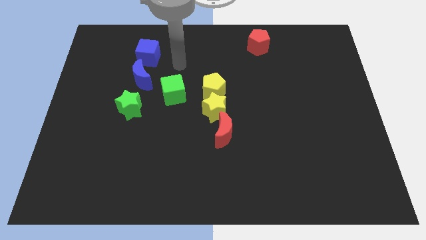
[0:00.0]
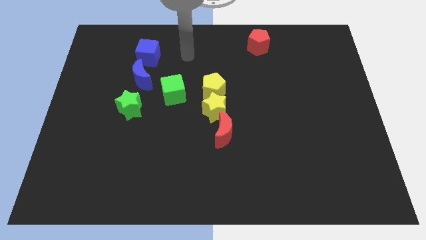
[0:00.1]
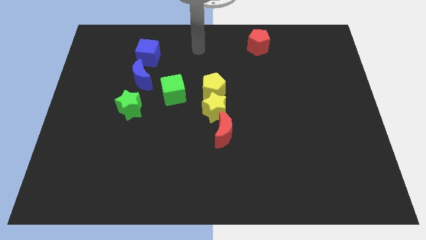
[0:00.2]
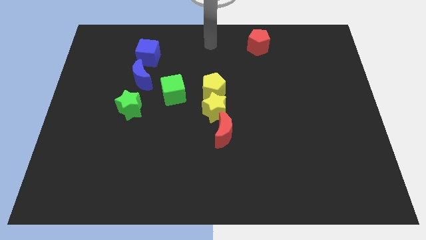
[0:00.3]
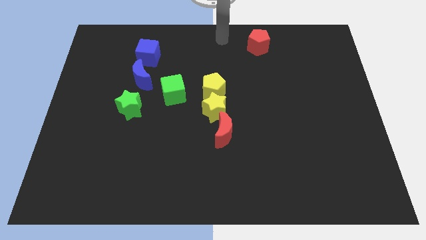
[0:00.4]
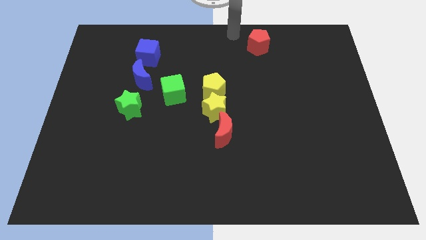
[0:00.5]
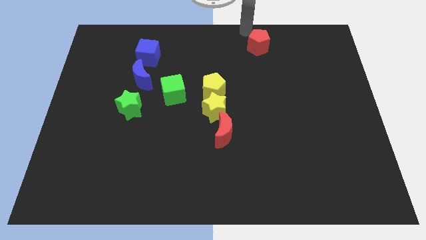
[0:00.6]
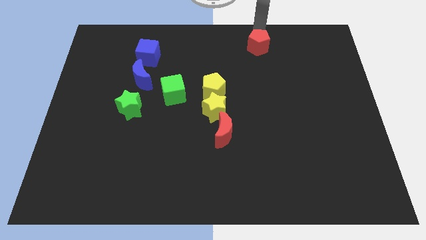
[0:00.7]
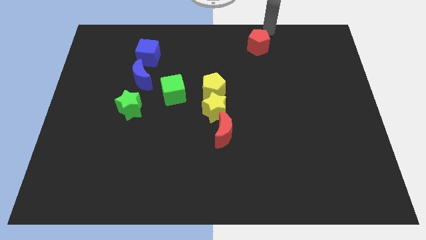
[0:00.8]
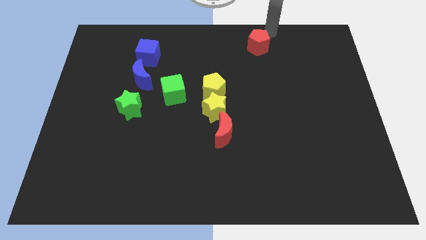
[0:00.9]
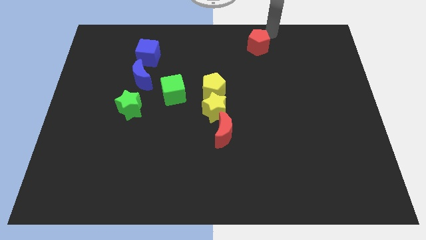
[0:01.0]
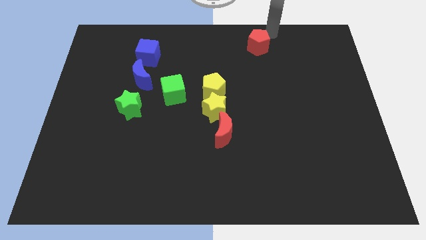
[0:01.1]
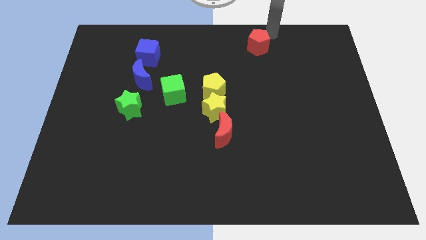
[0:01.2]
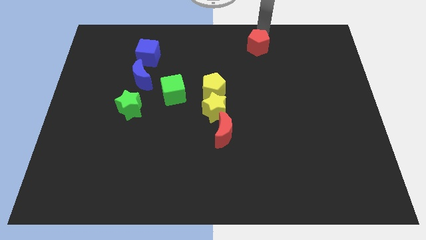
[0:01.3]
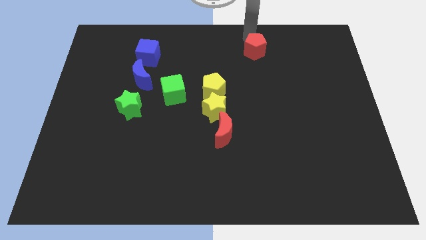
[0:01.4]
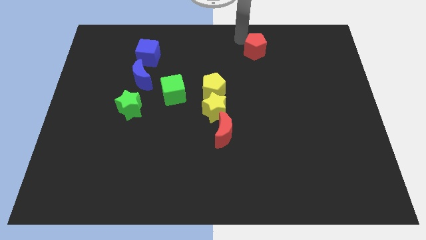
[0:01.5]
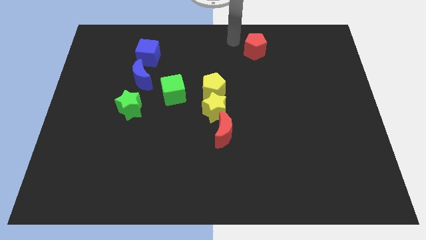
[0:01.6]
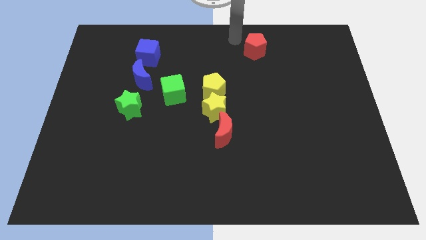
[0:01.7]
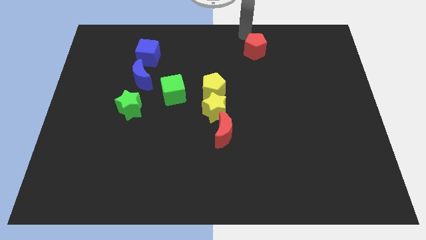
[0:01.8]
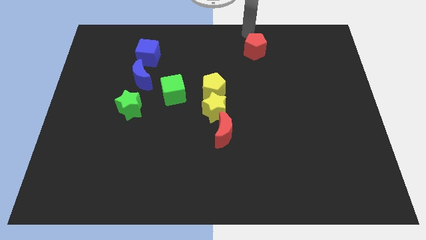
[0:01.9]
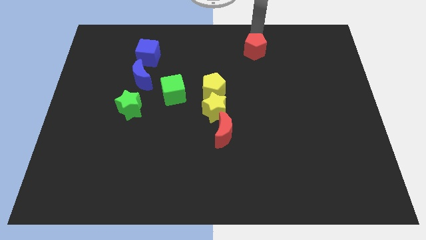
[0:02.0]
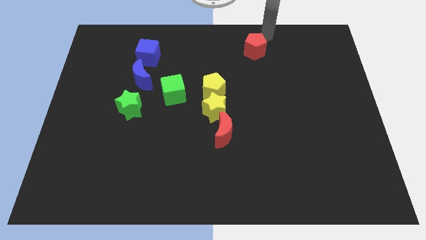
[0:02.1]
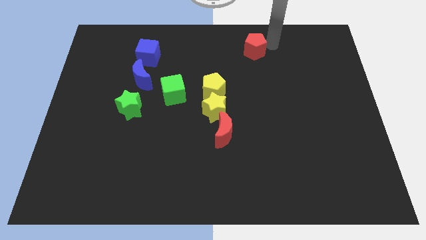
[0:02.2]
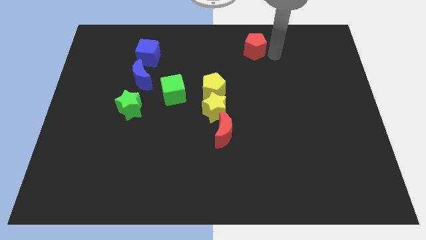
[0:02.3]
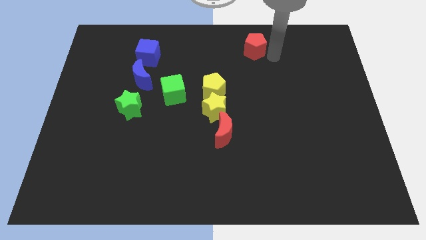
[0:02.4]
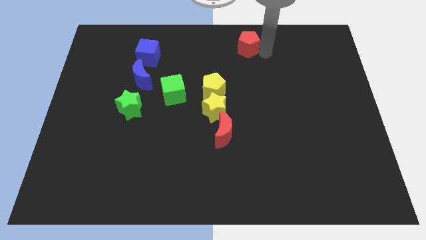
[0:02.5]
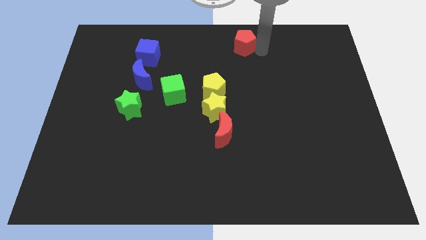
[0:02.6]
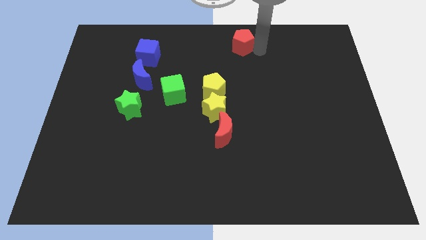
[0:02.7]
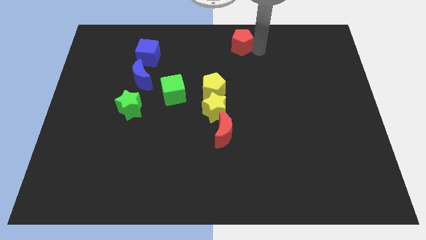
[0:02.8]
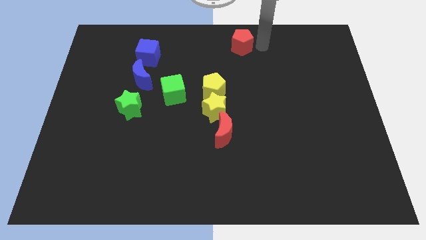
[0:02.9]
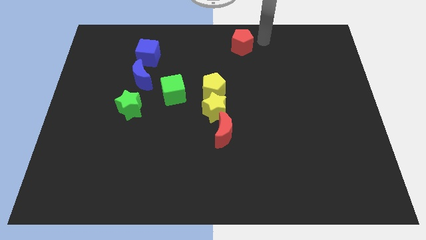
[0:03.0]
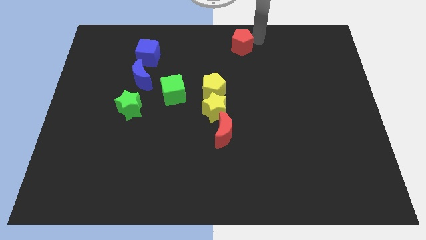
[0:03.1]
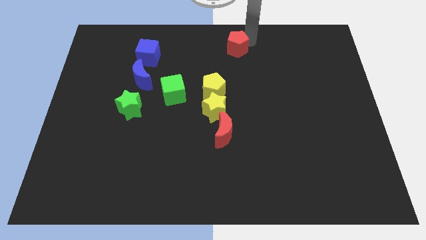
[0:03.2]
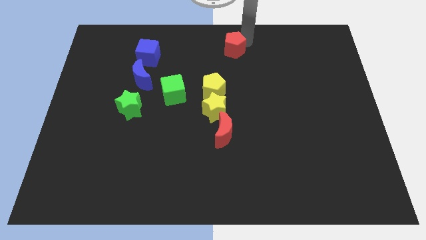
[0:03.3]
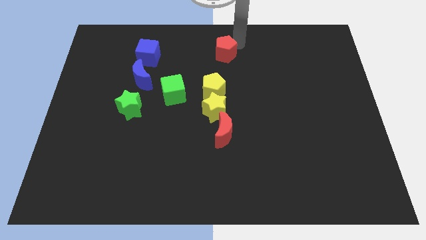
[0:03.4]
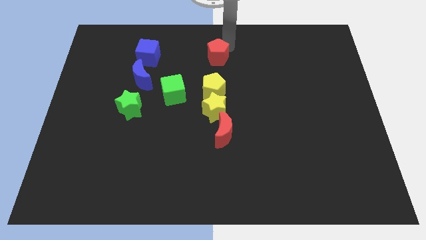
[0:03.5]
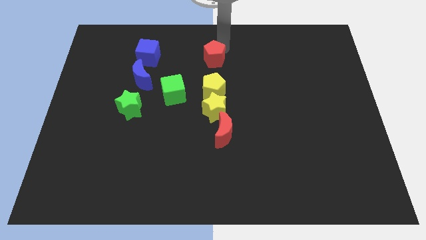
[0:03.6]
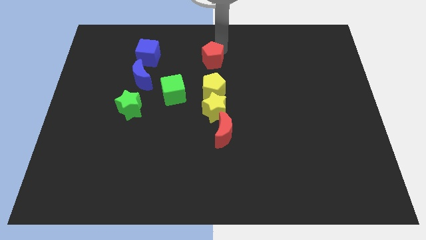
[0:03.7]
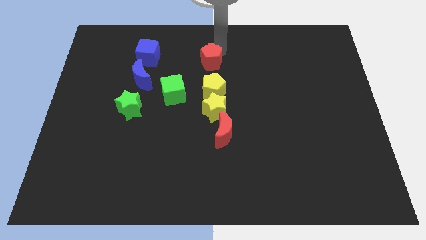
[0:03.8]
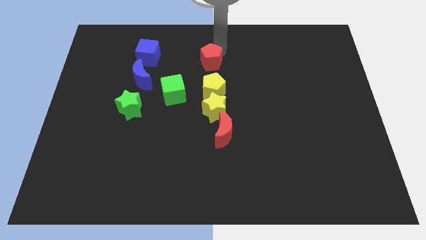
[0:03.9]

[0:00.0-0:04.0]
drag the red pentagon to the top side of the yellow pentagon

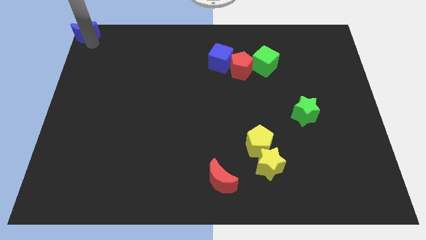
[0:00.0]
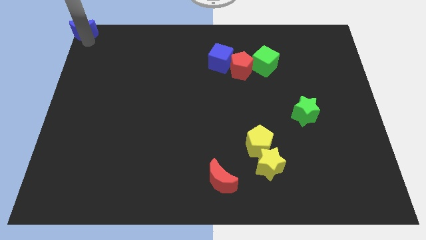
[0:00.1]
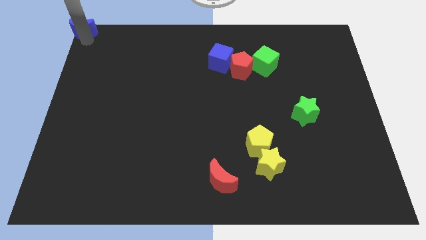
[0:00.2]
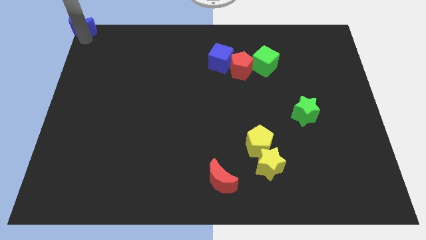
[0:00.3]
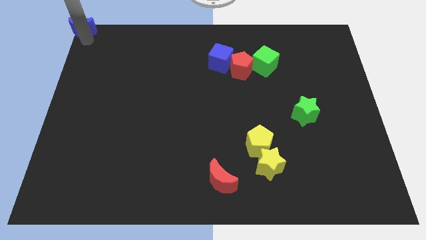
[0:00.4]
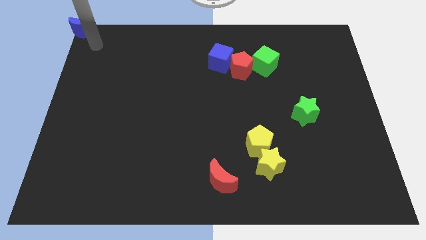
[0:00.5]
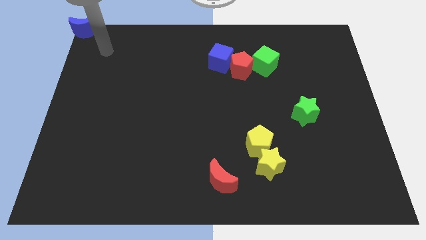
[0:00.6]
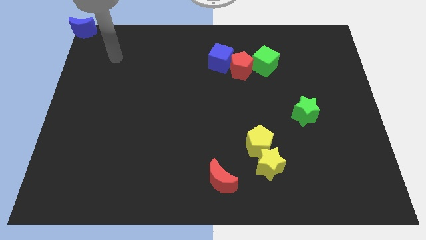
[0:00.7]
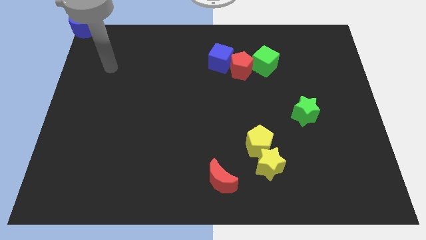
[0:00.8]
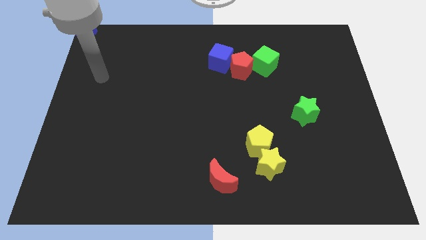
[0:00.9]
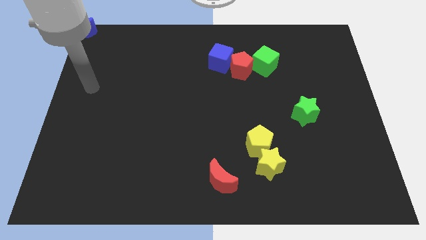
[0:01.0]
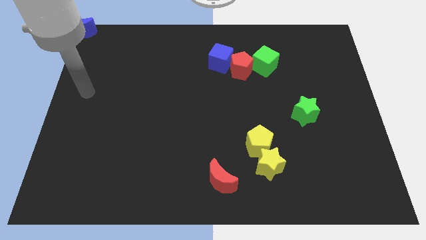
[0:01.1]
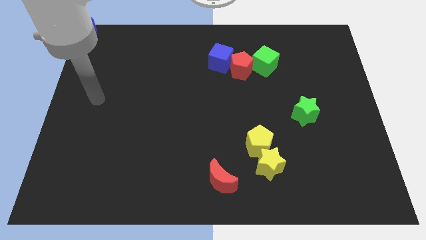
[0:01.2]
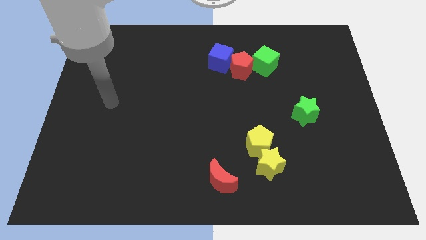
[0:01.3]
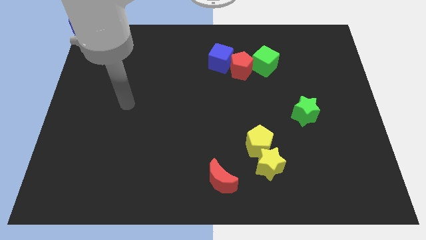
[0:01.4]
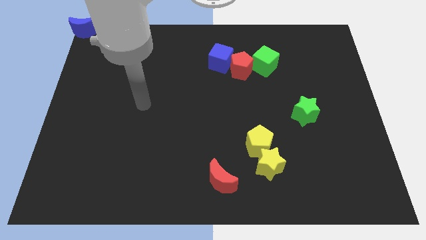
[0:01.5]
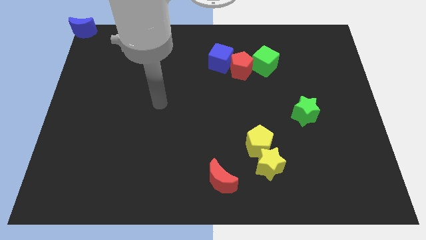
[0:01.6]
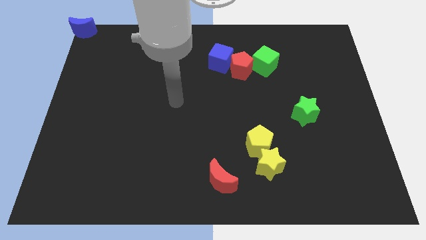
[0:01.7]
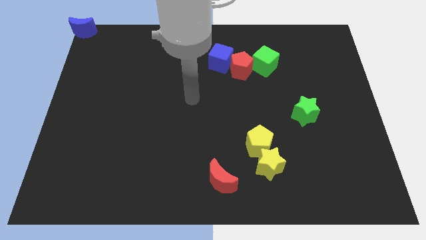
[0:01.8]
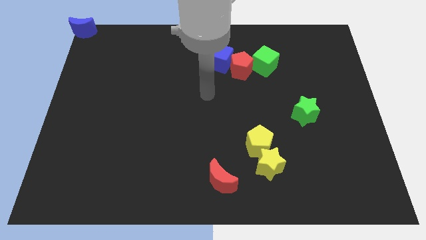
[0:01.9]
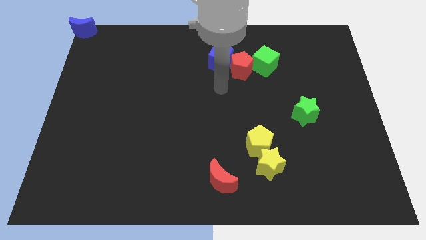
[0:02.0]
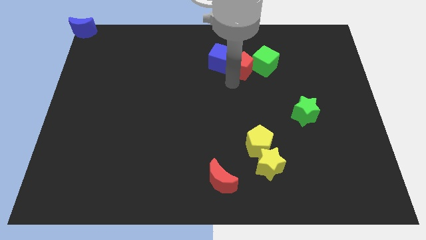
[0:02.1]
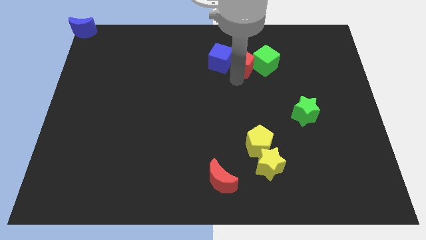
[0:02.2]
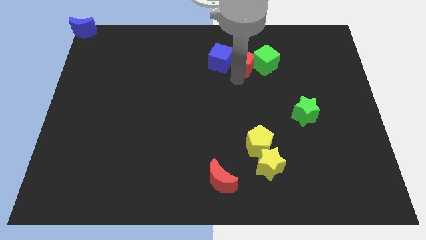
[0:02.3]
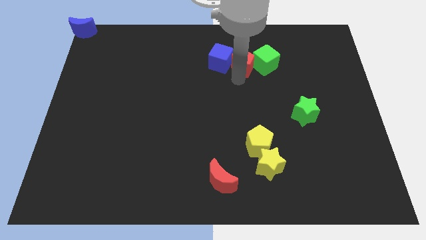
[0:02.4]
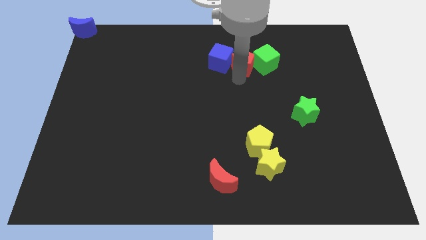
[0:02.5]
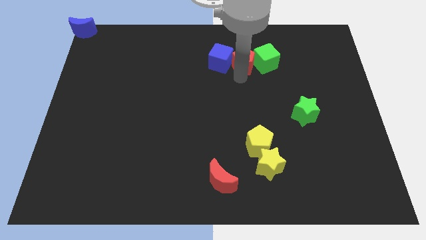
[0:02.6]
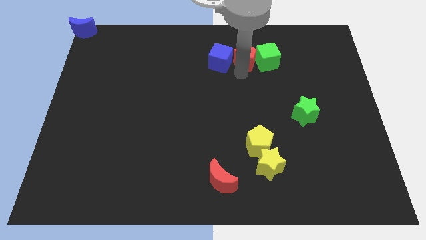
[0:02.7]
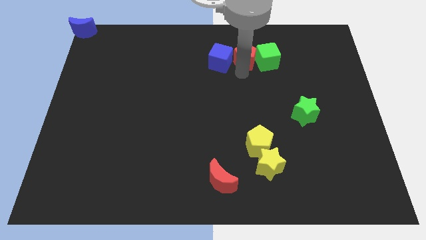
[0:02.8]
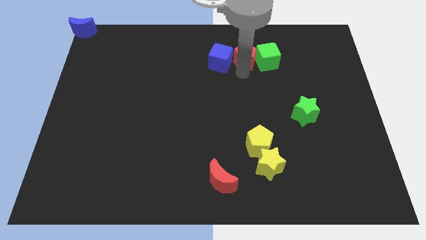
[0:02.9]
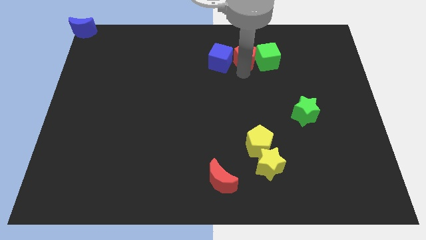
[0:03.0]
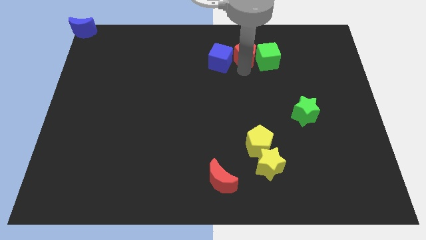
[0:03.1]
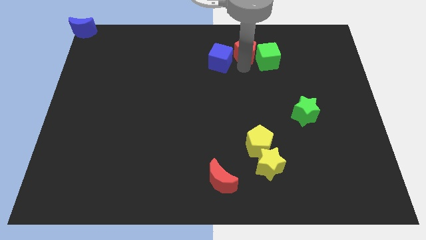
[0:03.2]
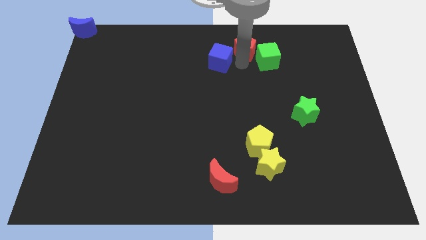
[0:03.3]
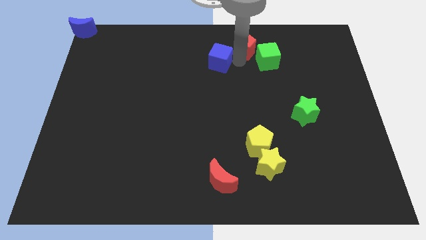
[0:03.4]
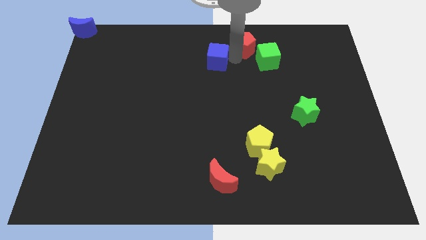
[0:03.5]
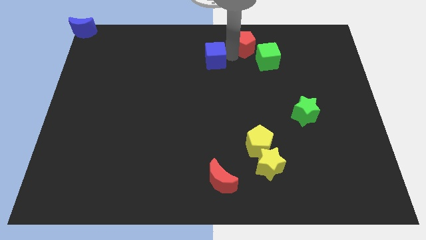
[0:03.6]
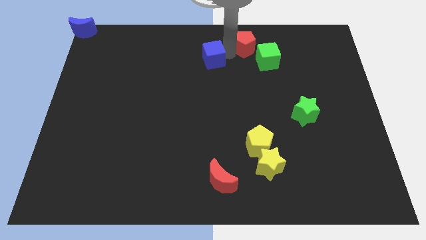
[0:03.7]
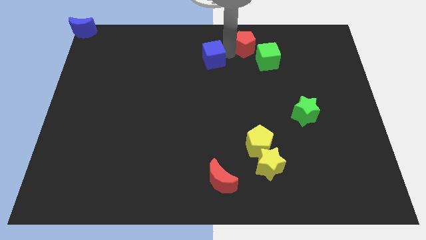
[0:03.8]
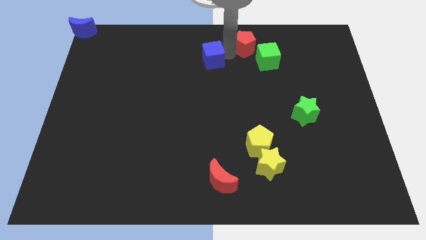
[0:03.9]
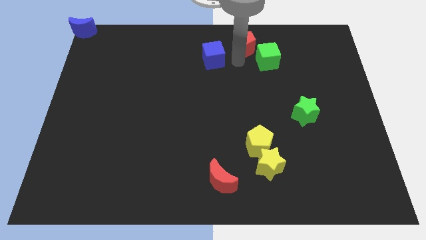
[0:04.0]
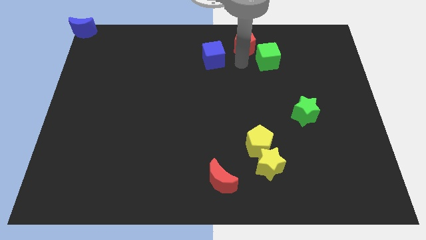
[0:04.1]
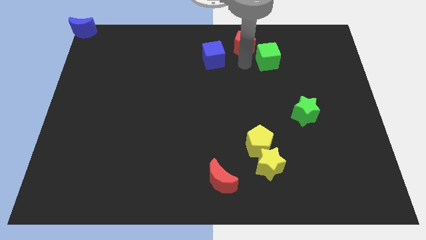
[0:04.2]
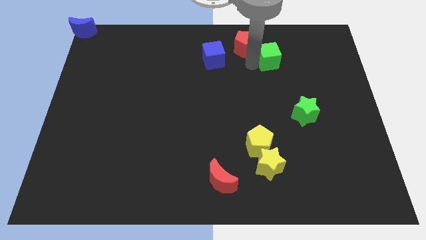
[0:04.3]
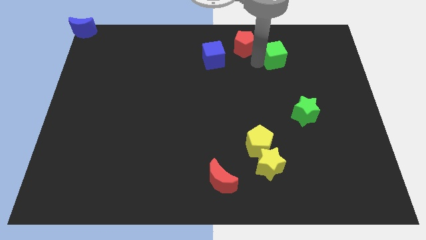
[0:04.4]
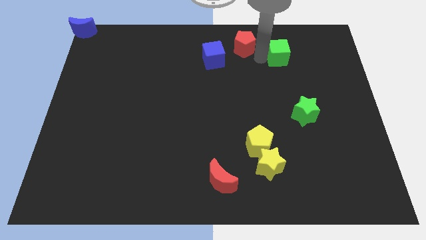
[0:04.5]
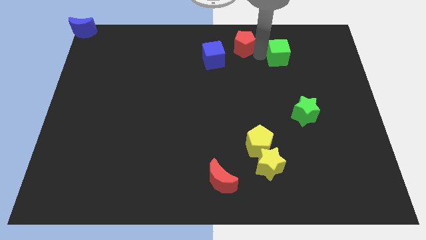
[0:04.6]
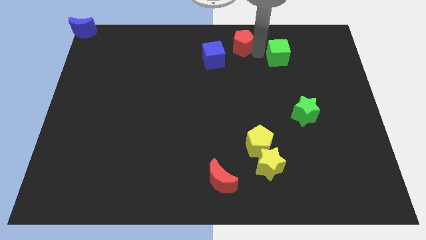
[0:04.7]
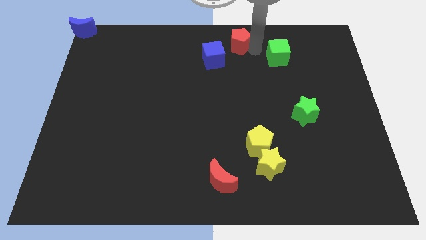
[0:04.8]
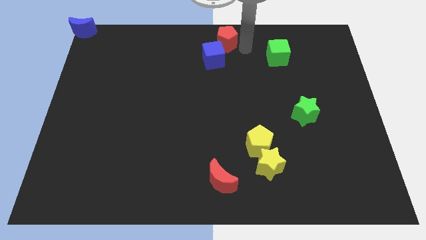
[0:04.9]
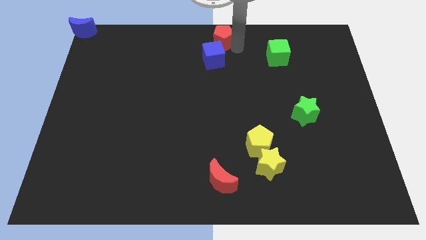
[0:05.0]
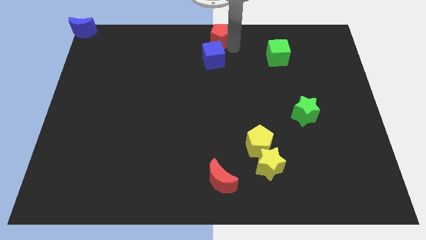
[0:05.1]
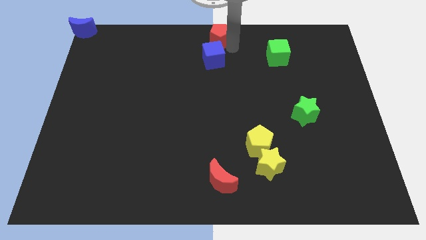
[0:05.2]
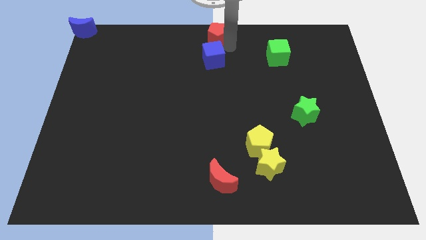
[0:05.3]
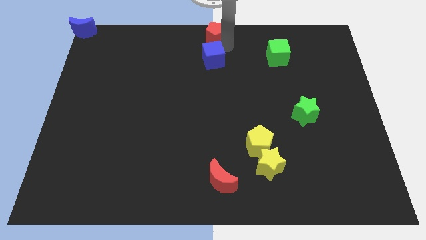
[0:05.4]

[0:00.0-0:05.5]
move the red pentagon to the top center side
